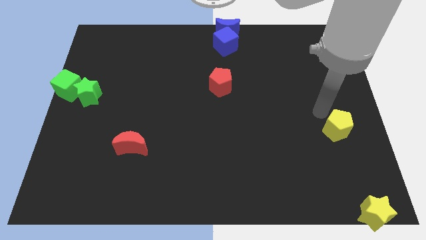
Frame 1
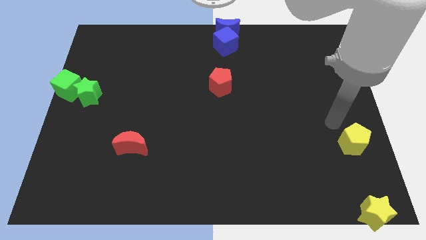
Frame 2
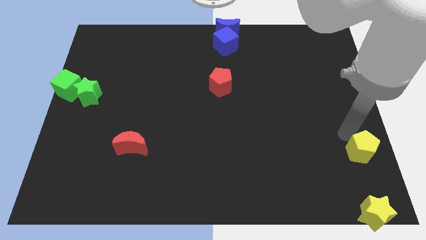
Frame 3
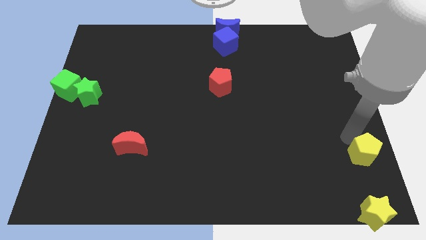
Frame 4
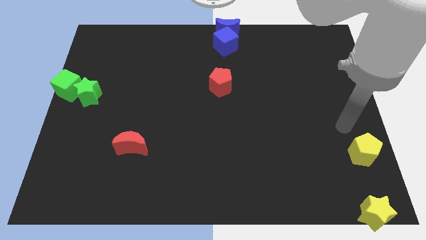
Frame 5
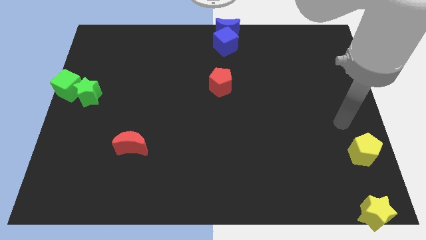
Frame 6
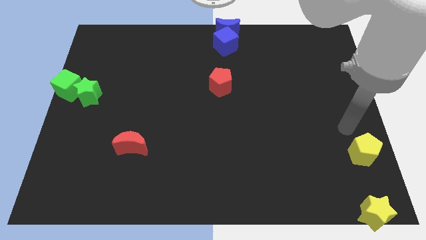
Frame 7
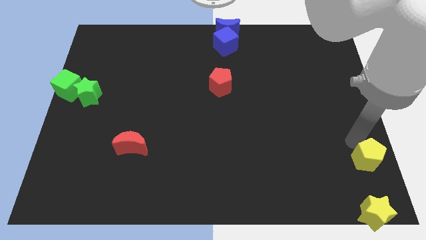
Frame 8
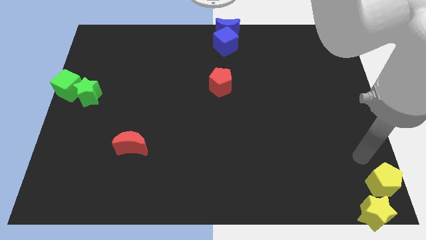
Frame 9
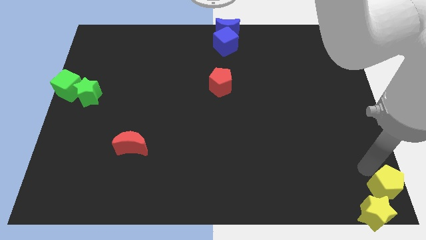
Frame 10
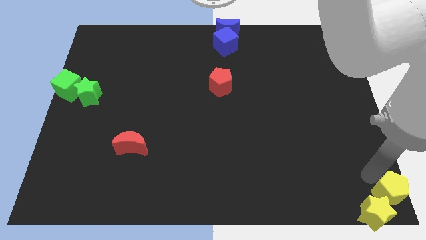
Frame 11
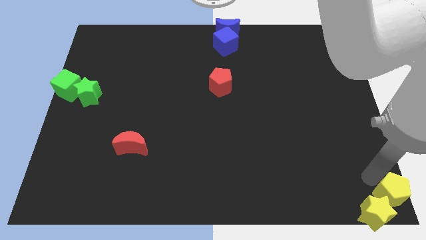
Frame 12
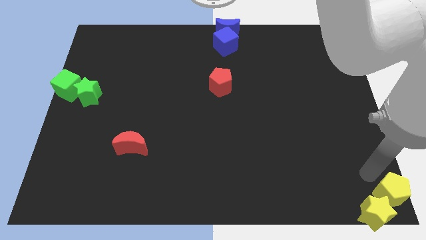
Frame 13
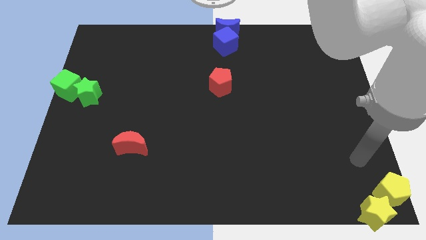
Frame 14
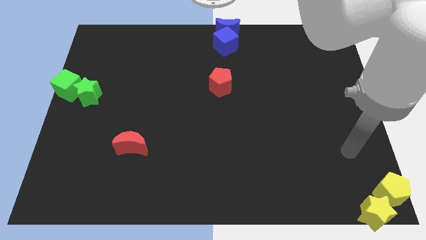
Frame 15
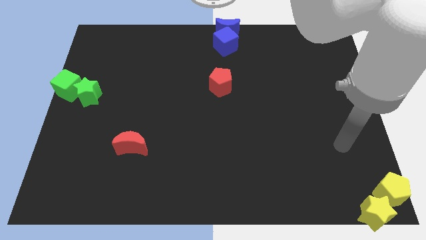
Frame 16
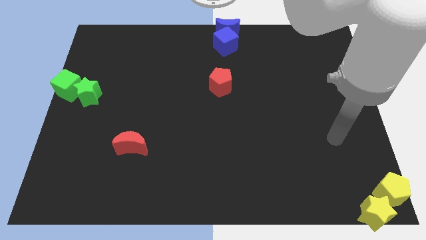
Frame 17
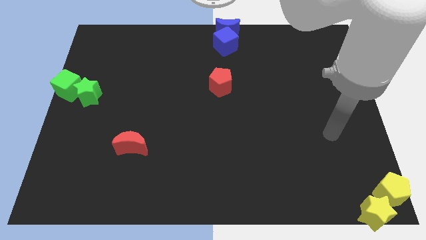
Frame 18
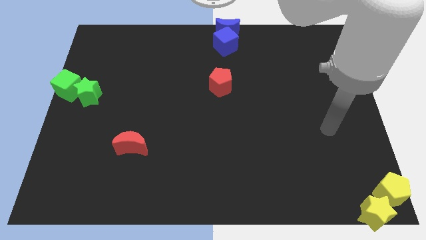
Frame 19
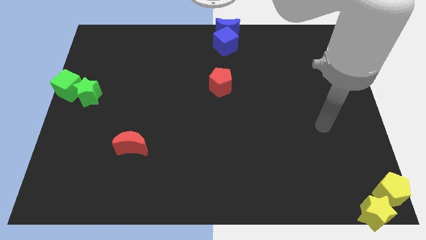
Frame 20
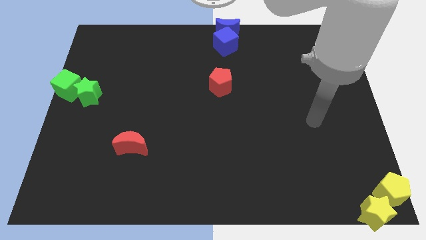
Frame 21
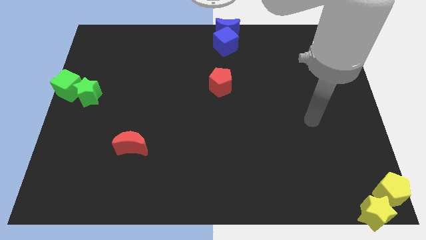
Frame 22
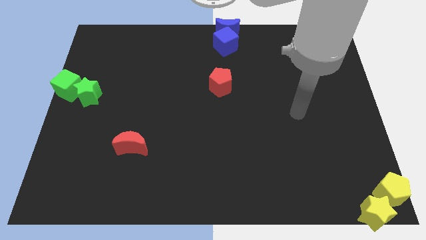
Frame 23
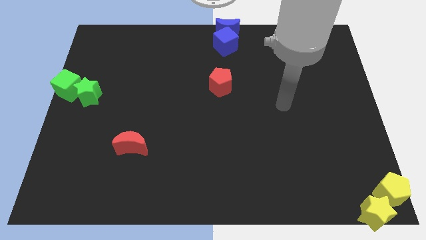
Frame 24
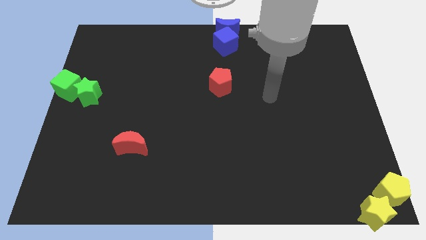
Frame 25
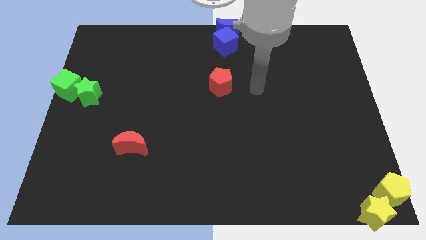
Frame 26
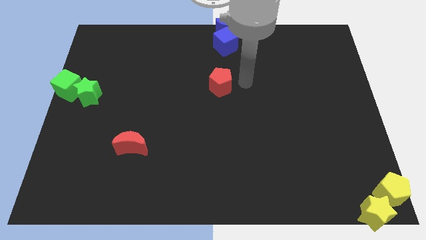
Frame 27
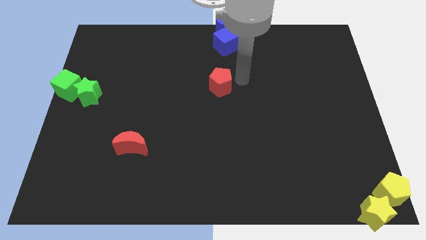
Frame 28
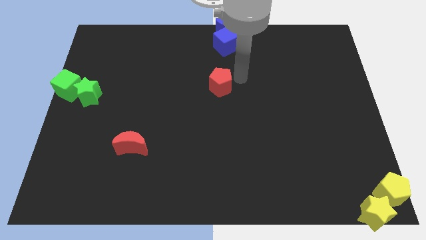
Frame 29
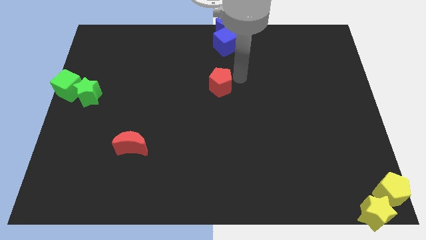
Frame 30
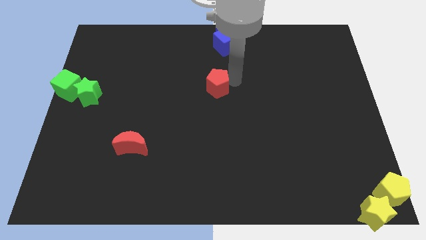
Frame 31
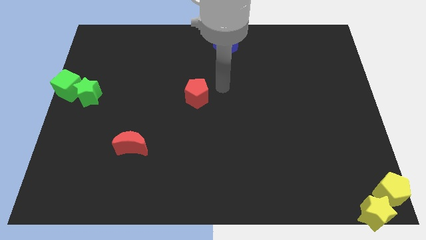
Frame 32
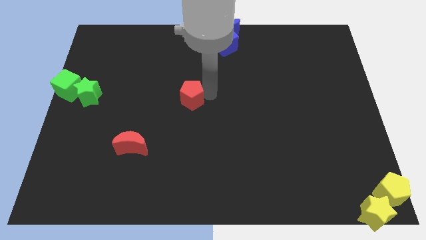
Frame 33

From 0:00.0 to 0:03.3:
push the yellow pentagon into the yellow star

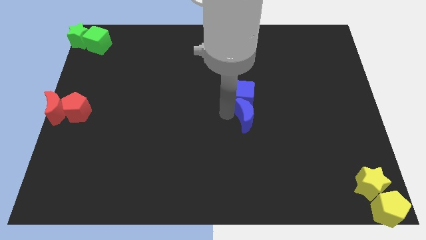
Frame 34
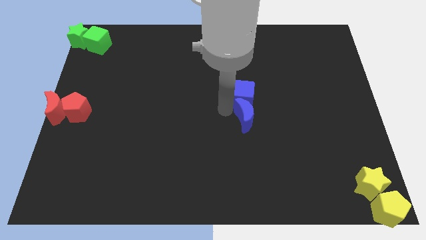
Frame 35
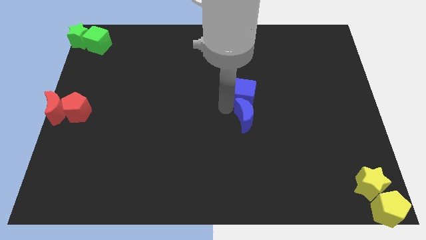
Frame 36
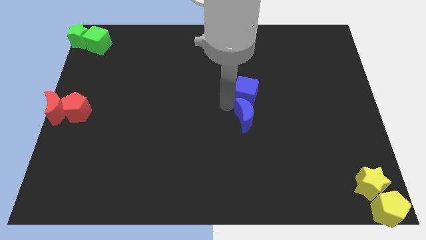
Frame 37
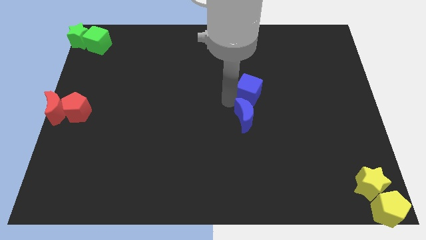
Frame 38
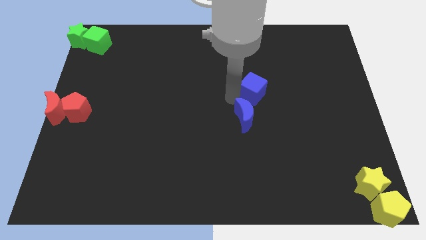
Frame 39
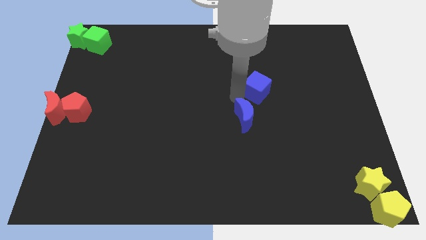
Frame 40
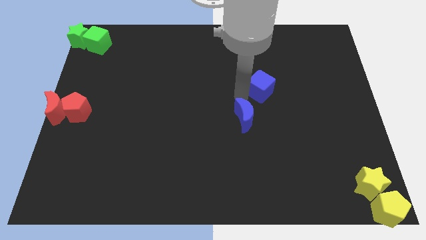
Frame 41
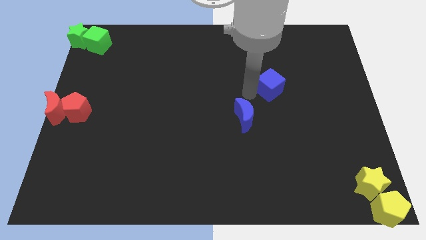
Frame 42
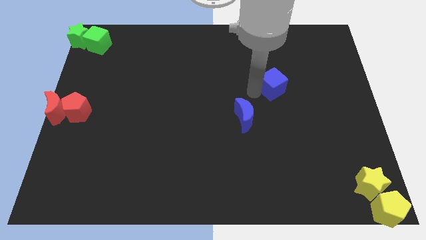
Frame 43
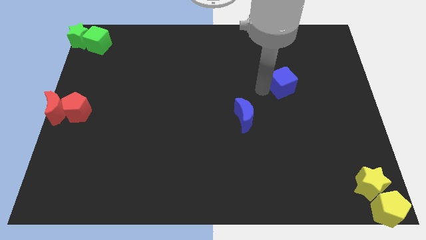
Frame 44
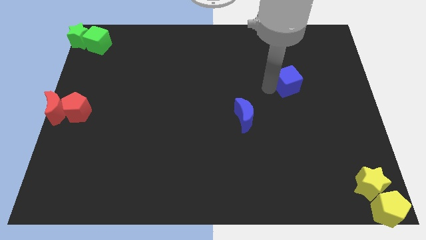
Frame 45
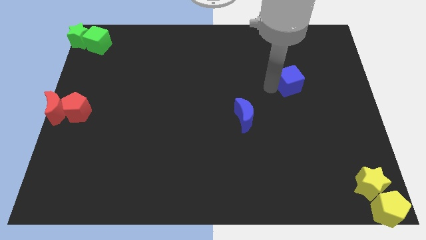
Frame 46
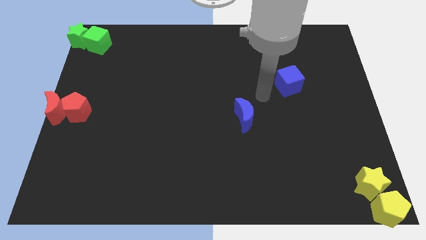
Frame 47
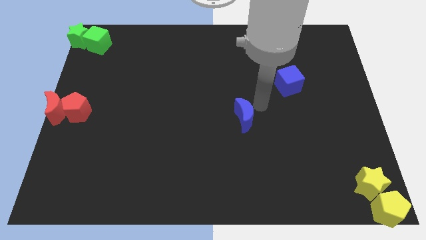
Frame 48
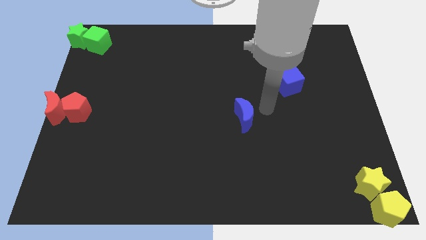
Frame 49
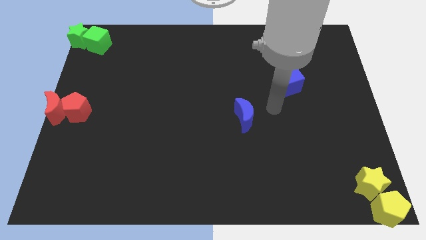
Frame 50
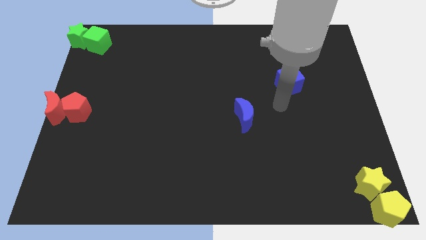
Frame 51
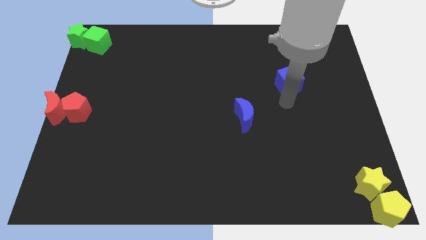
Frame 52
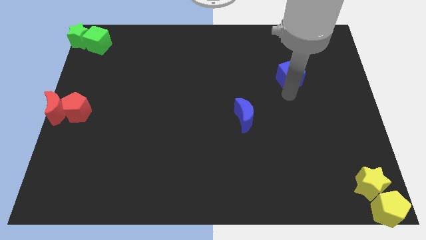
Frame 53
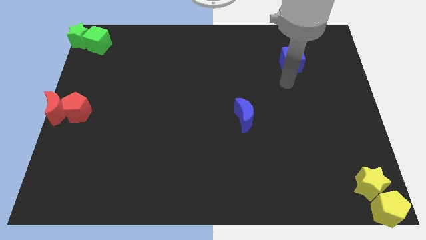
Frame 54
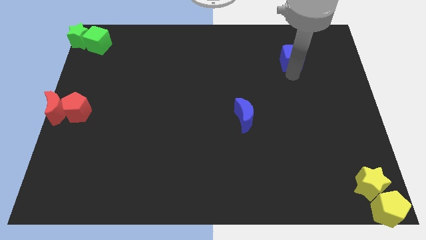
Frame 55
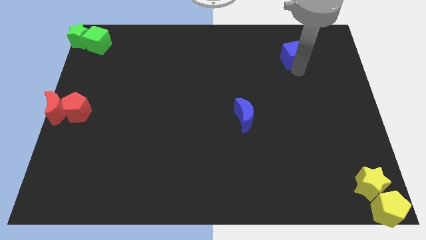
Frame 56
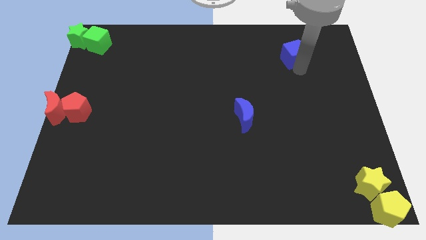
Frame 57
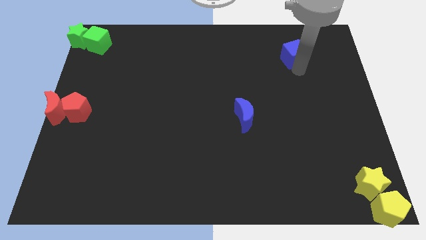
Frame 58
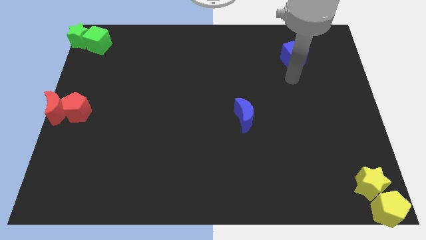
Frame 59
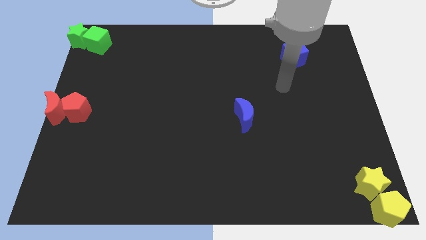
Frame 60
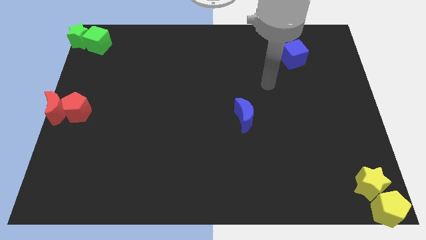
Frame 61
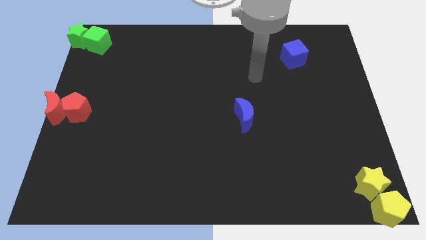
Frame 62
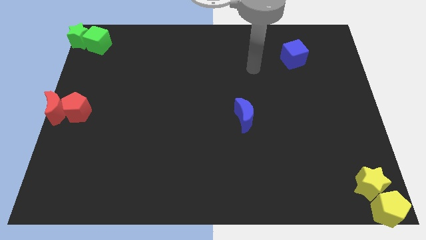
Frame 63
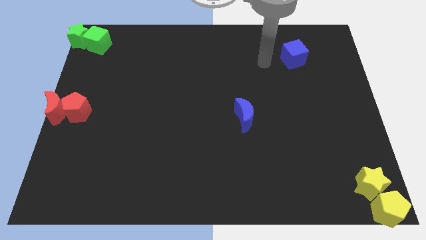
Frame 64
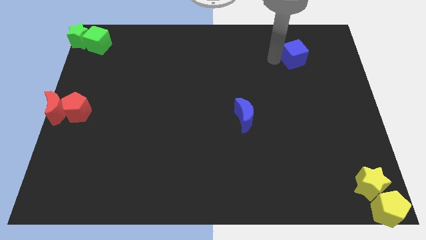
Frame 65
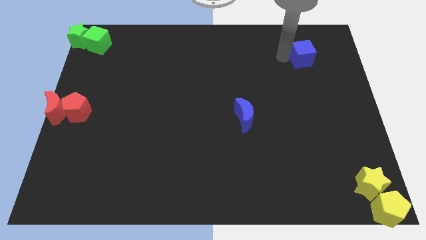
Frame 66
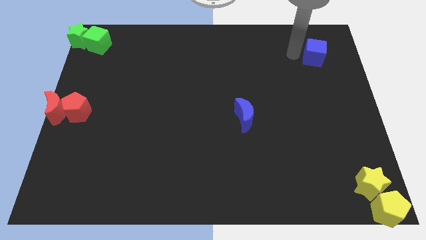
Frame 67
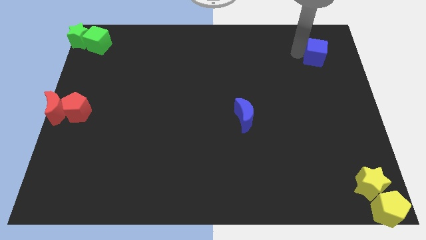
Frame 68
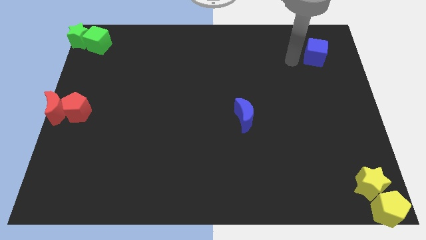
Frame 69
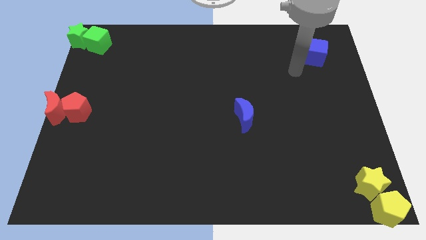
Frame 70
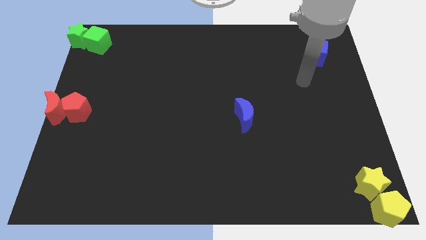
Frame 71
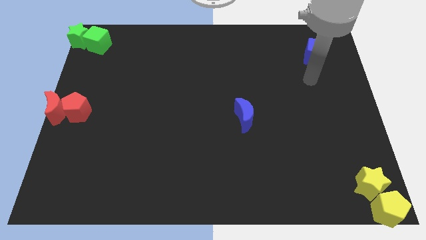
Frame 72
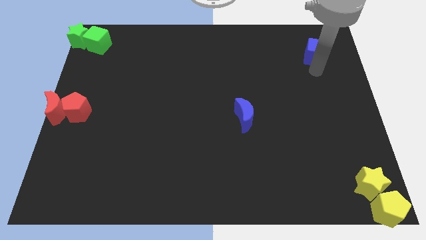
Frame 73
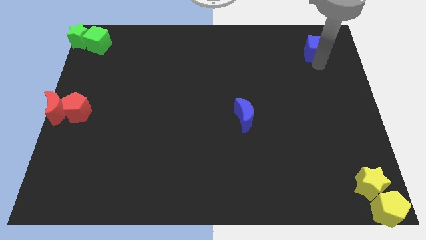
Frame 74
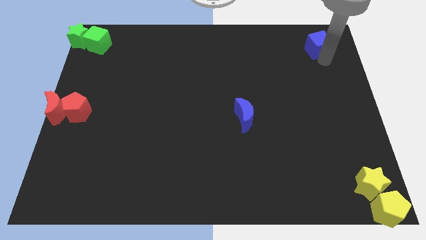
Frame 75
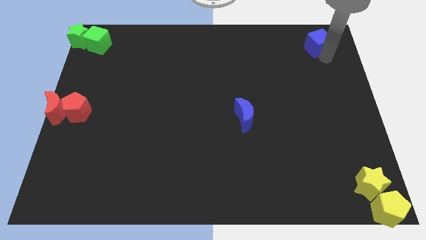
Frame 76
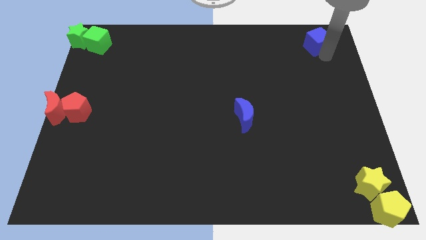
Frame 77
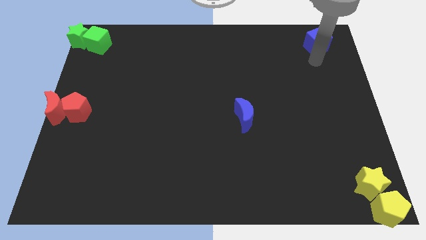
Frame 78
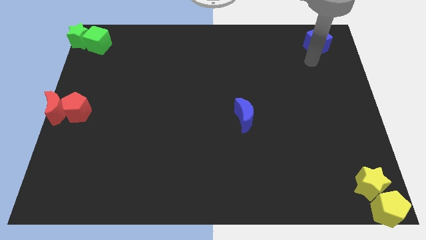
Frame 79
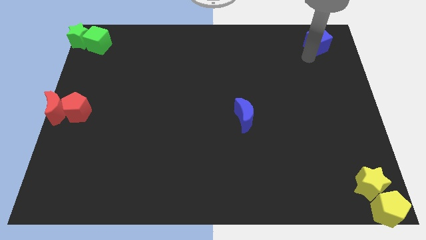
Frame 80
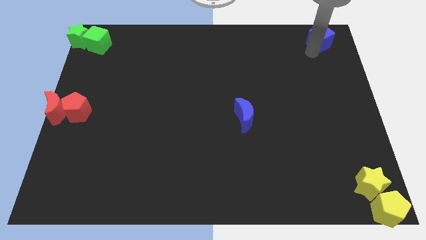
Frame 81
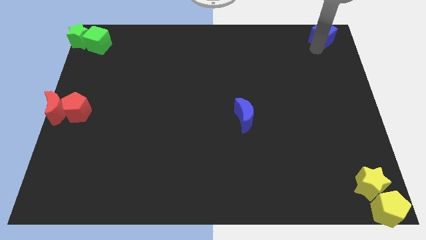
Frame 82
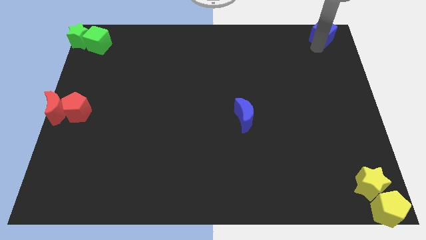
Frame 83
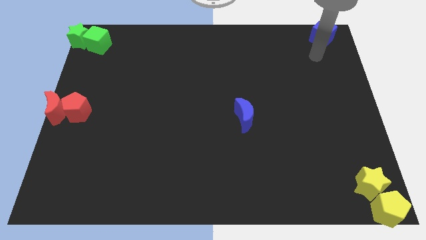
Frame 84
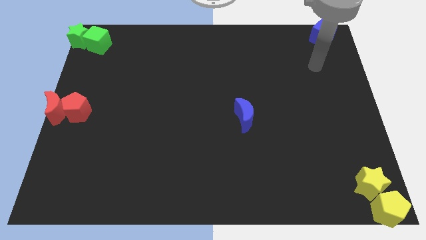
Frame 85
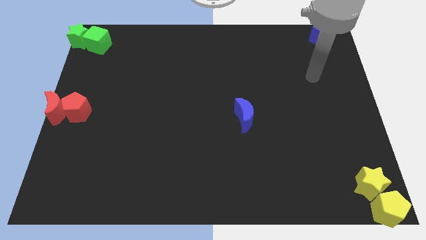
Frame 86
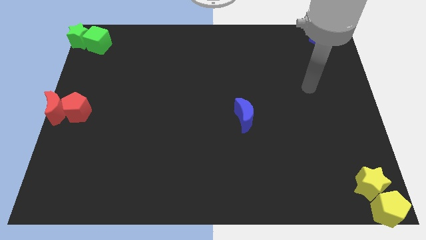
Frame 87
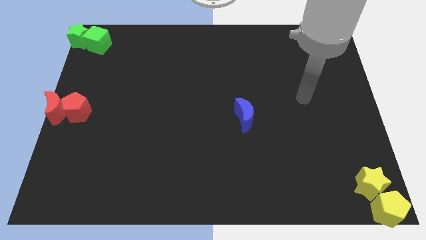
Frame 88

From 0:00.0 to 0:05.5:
move the blue cube to the top right corner

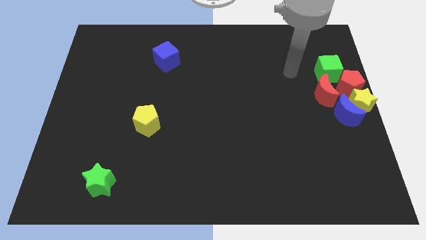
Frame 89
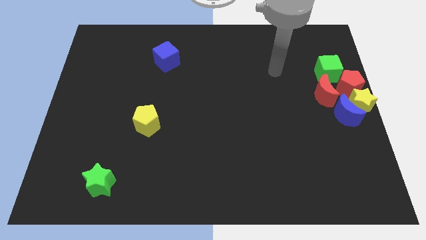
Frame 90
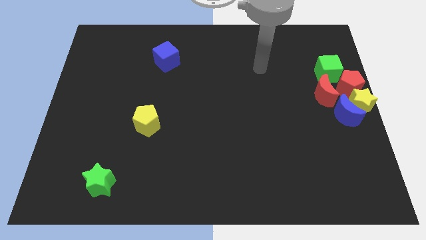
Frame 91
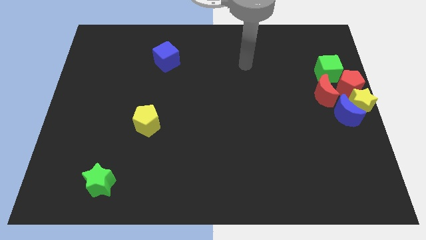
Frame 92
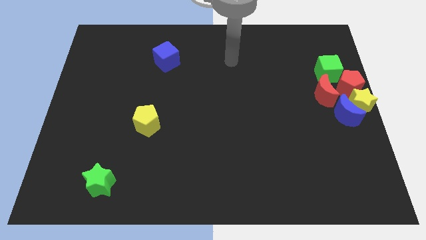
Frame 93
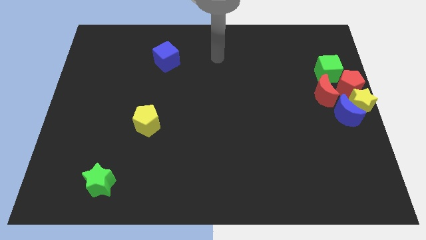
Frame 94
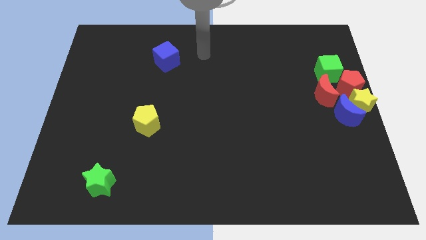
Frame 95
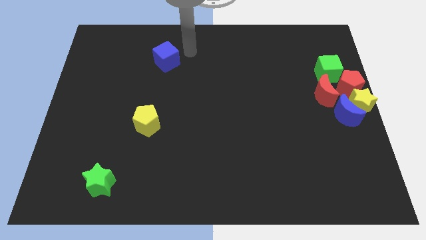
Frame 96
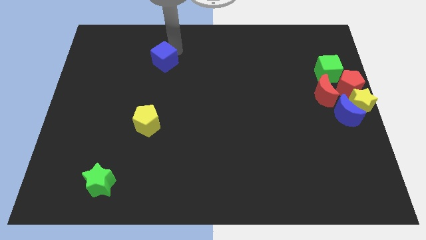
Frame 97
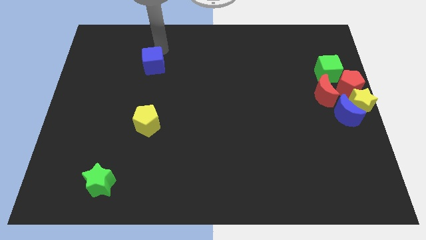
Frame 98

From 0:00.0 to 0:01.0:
move blue cube slightly left
